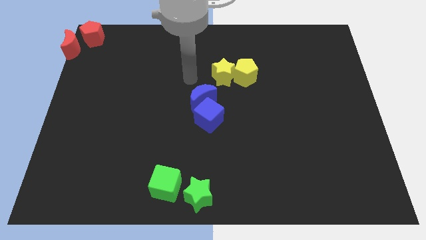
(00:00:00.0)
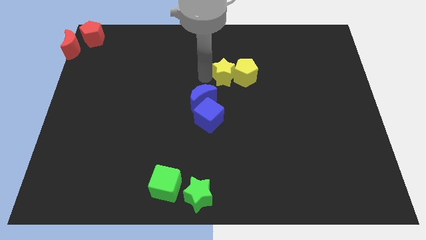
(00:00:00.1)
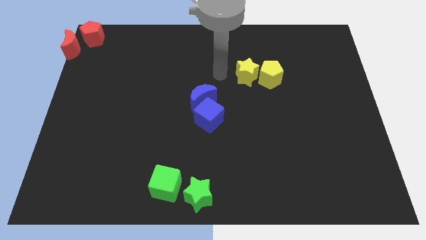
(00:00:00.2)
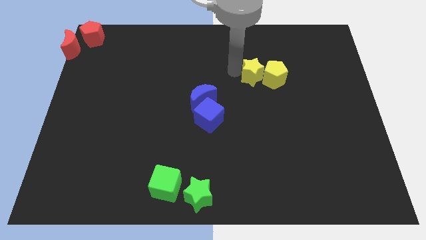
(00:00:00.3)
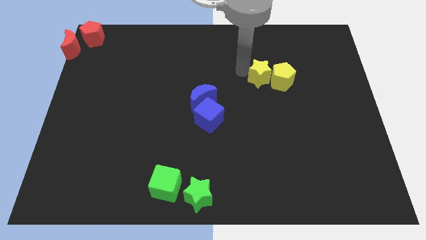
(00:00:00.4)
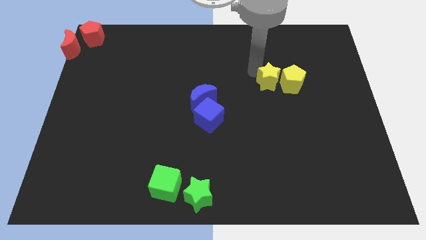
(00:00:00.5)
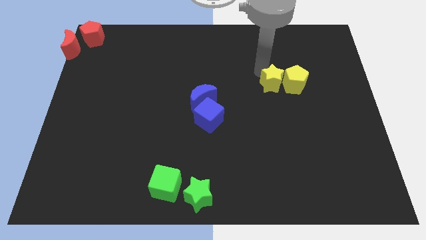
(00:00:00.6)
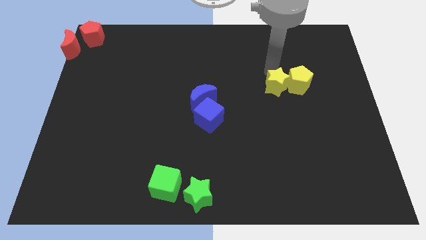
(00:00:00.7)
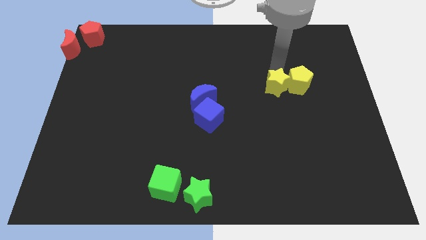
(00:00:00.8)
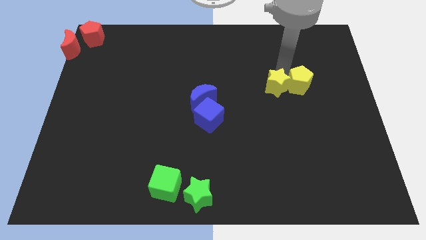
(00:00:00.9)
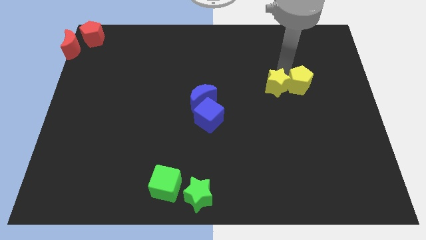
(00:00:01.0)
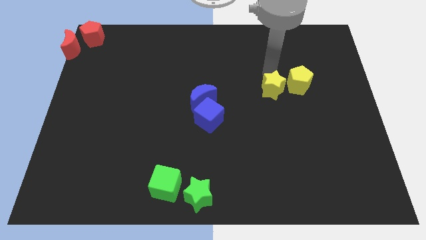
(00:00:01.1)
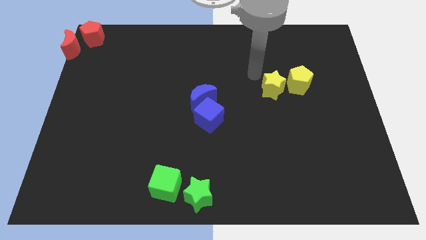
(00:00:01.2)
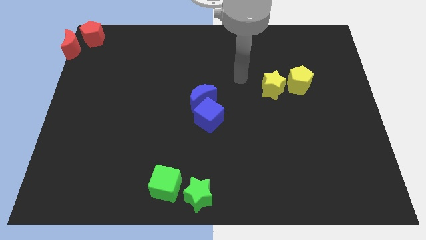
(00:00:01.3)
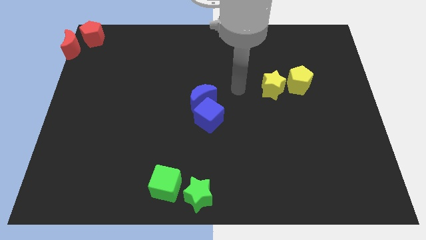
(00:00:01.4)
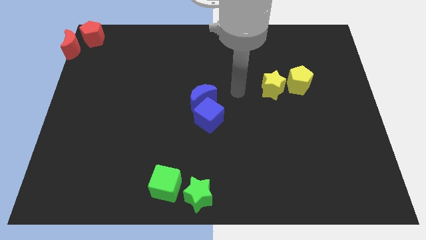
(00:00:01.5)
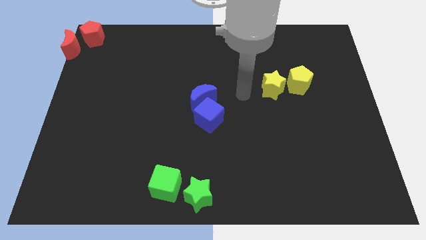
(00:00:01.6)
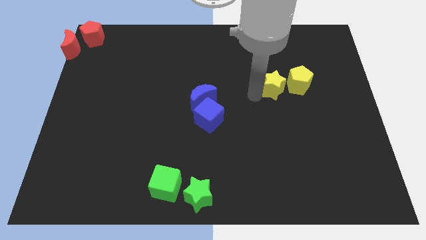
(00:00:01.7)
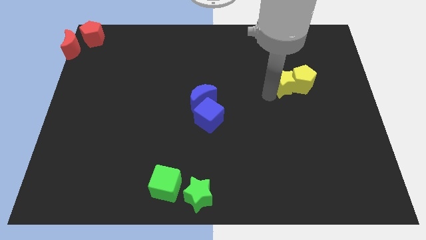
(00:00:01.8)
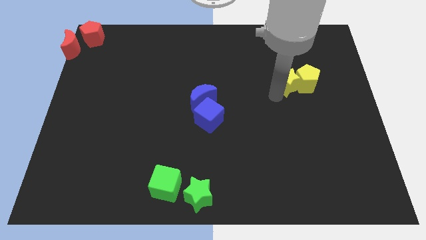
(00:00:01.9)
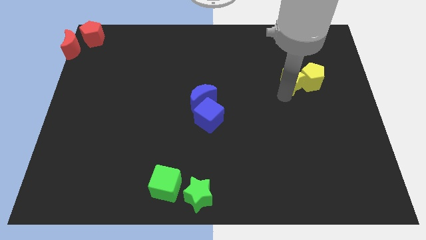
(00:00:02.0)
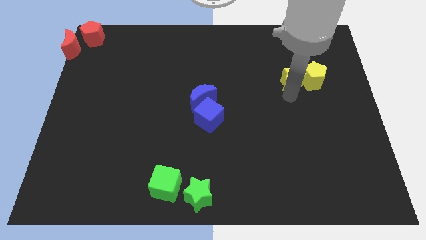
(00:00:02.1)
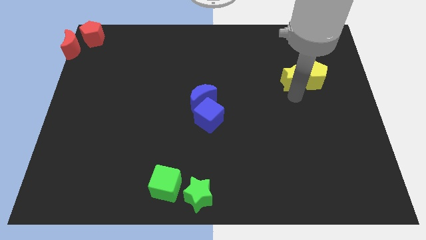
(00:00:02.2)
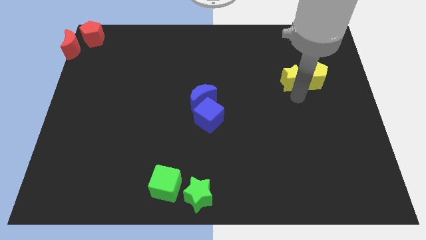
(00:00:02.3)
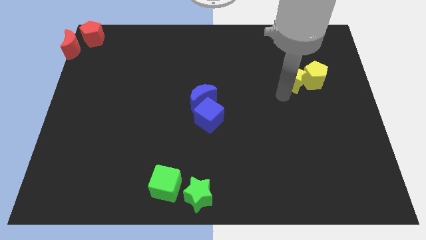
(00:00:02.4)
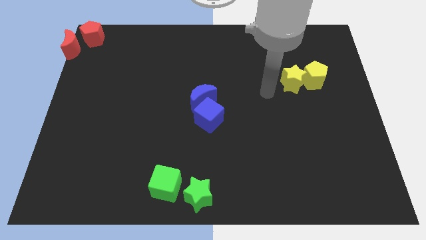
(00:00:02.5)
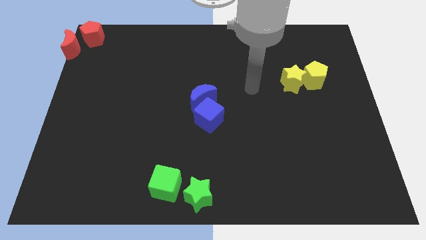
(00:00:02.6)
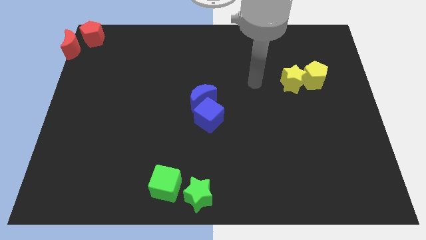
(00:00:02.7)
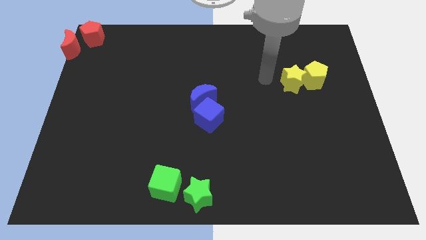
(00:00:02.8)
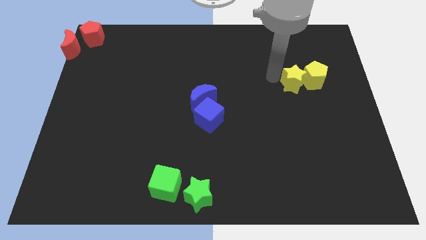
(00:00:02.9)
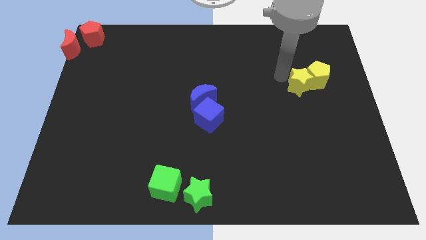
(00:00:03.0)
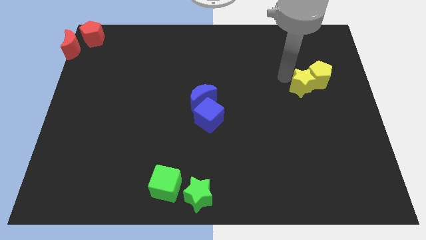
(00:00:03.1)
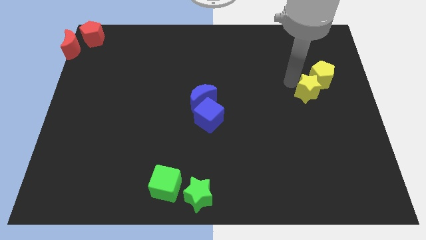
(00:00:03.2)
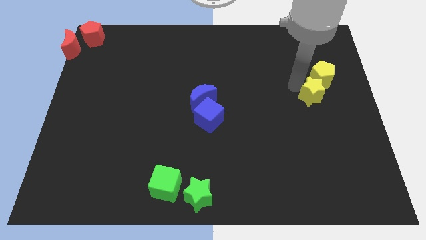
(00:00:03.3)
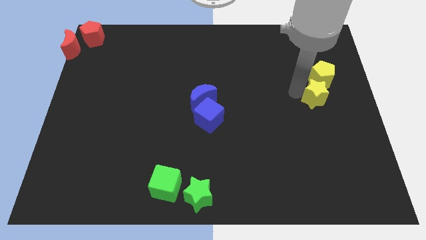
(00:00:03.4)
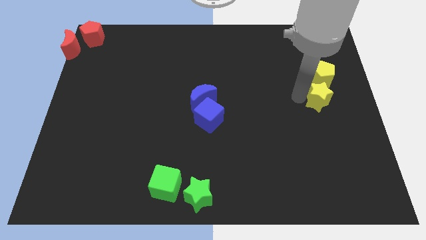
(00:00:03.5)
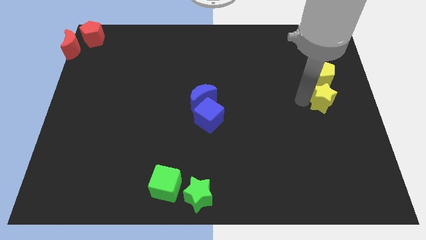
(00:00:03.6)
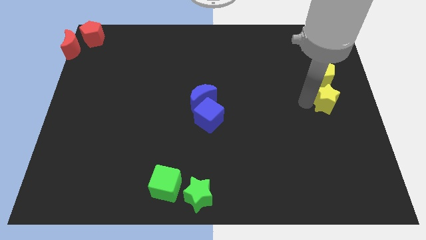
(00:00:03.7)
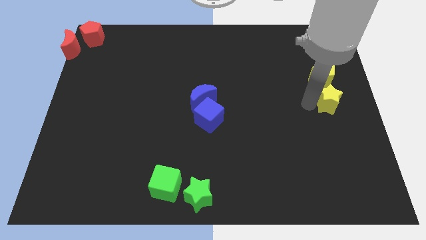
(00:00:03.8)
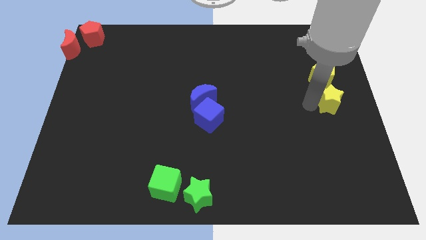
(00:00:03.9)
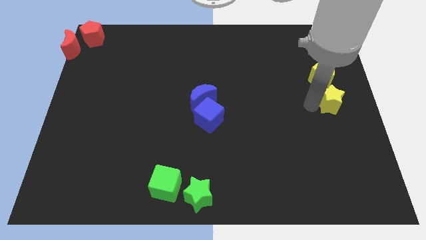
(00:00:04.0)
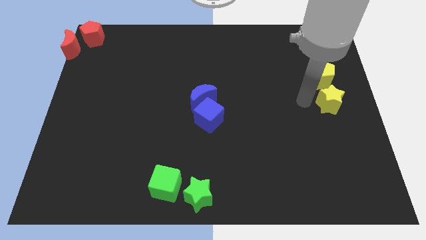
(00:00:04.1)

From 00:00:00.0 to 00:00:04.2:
move the yellow blocks towards the right center of the board

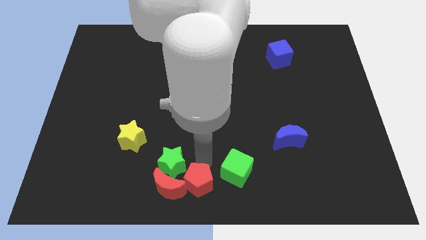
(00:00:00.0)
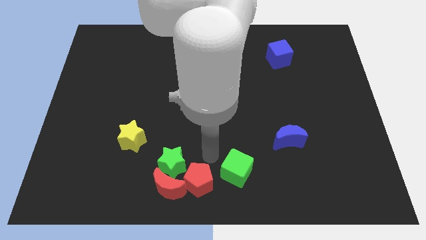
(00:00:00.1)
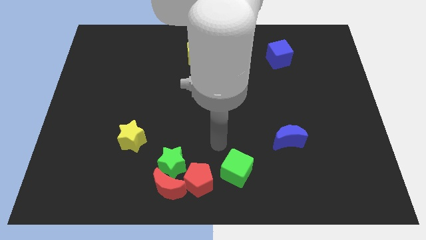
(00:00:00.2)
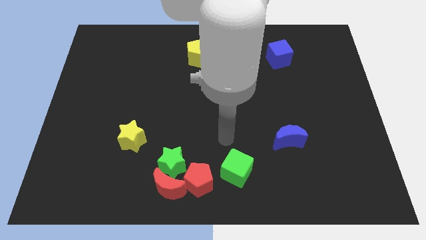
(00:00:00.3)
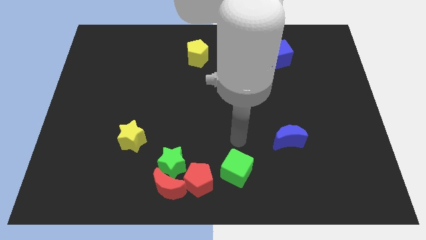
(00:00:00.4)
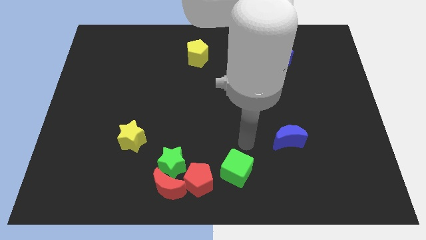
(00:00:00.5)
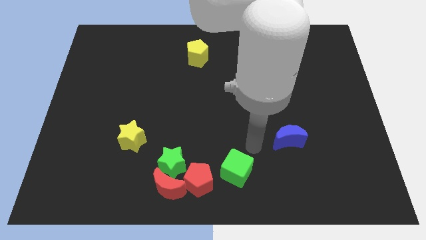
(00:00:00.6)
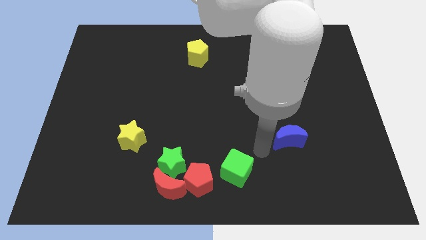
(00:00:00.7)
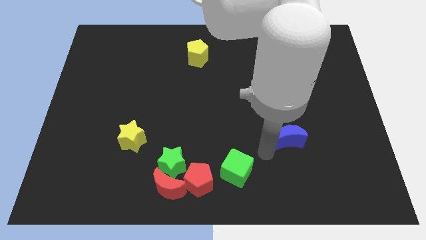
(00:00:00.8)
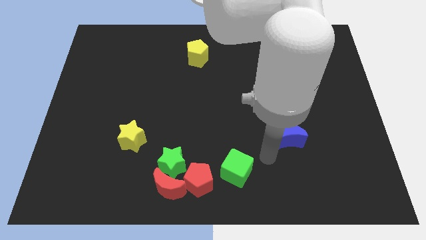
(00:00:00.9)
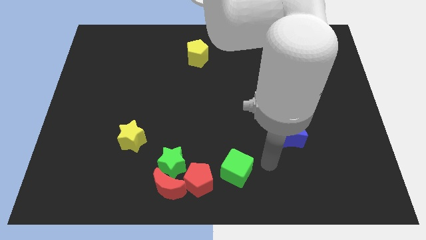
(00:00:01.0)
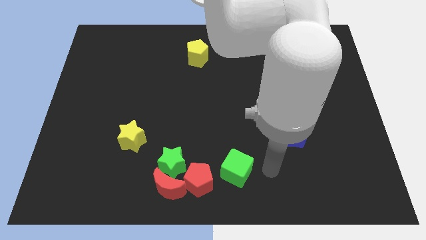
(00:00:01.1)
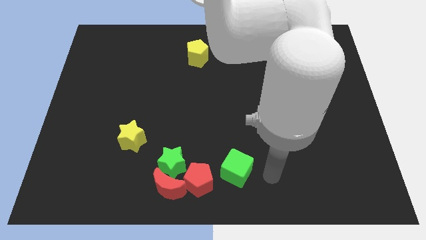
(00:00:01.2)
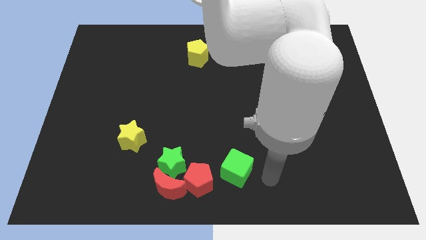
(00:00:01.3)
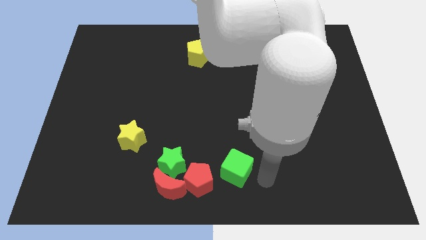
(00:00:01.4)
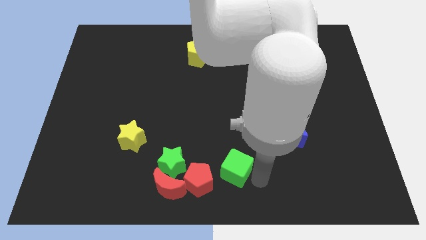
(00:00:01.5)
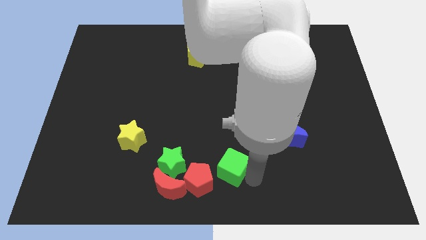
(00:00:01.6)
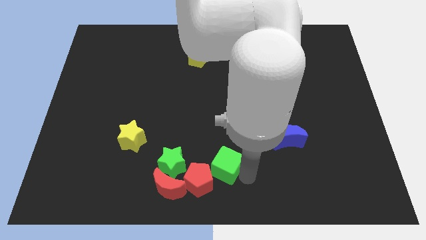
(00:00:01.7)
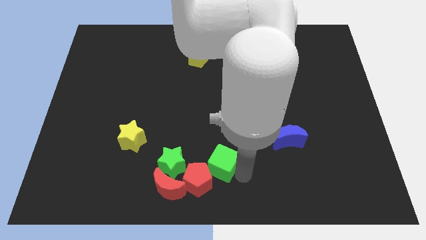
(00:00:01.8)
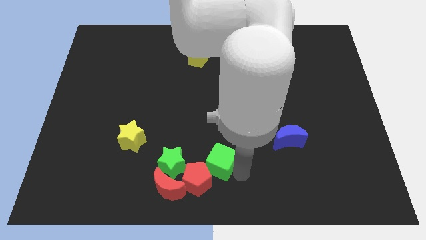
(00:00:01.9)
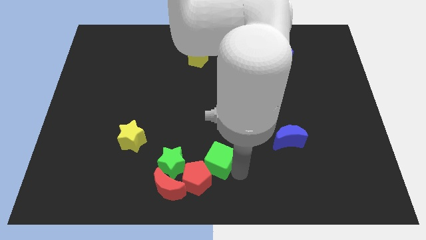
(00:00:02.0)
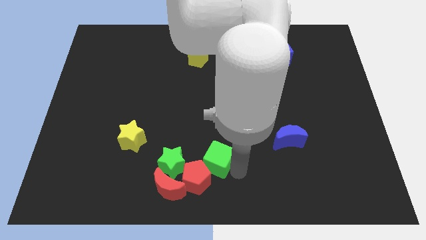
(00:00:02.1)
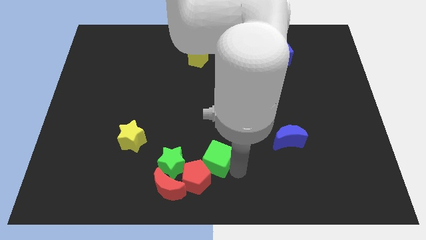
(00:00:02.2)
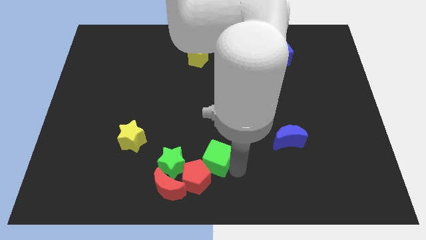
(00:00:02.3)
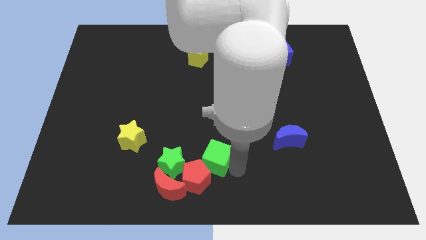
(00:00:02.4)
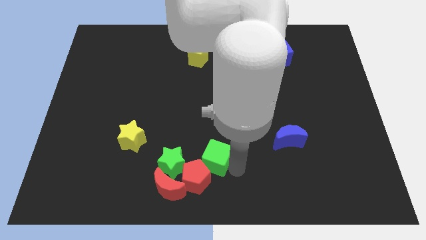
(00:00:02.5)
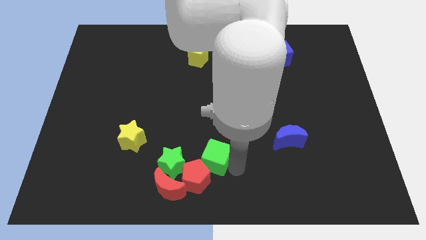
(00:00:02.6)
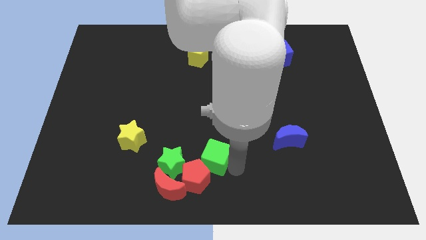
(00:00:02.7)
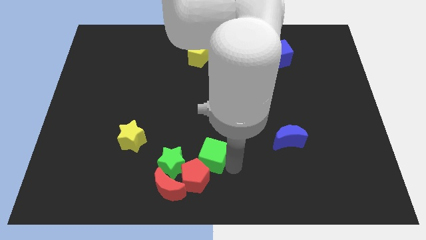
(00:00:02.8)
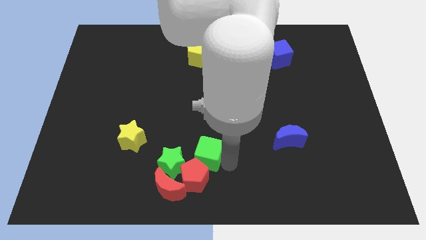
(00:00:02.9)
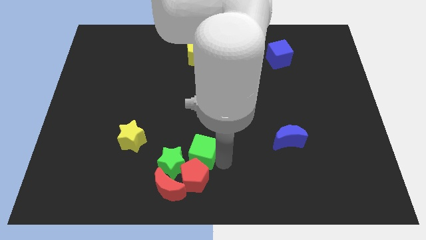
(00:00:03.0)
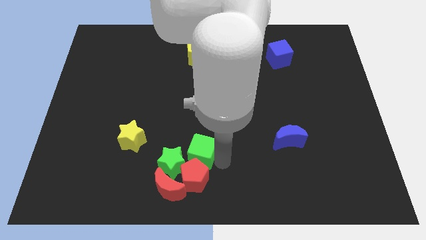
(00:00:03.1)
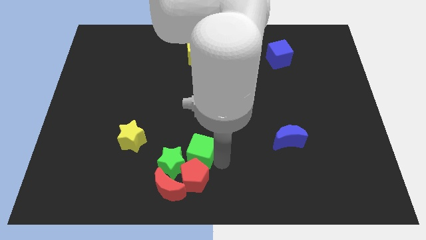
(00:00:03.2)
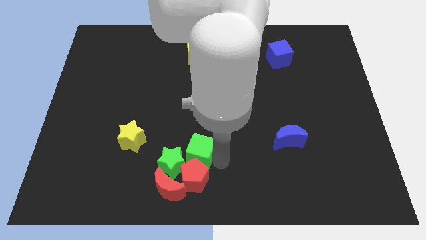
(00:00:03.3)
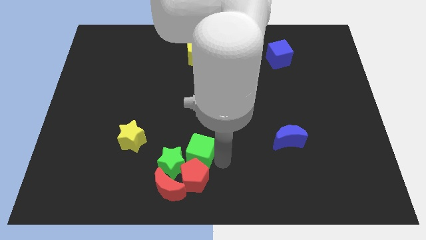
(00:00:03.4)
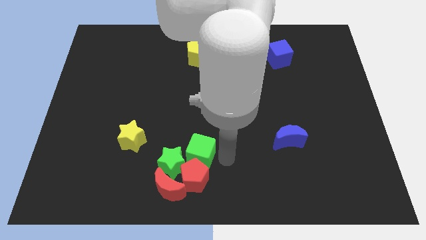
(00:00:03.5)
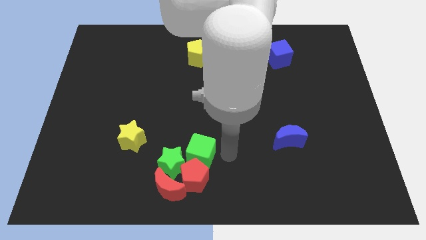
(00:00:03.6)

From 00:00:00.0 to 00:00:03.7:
place green cube at the top of the red pentagon

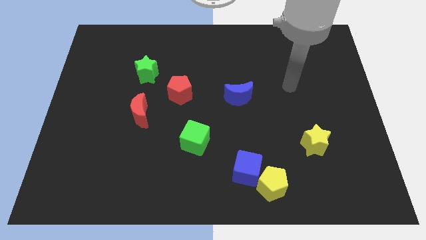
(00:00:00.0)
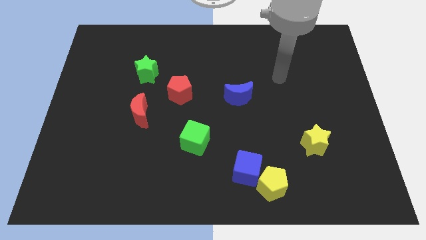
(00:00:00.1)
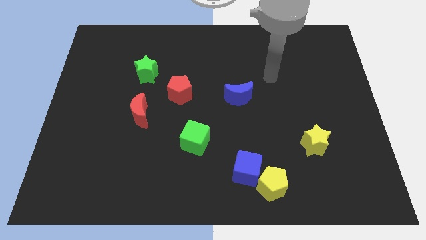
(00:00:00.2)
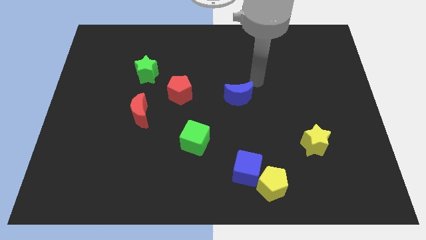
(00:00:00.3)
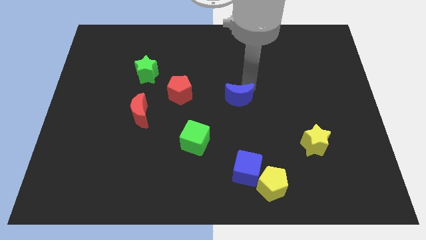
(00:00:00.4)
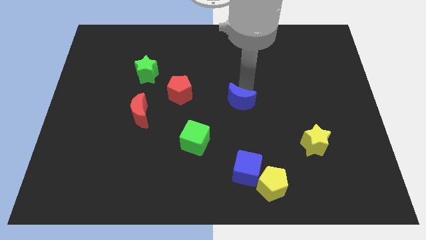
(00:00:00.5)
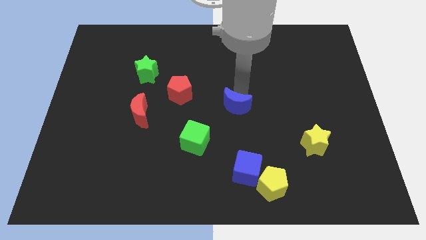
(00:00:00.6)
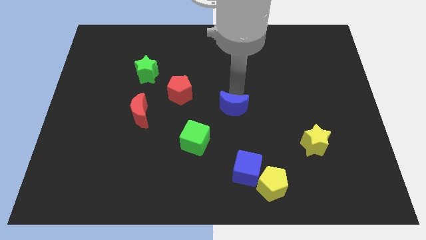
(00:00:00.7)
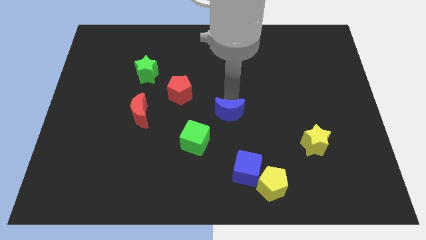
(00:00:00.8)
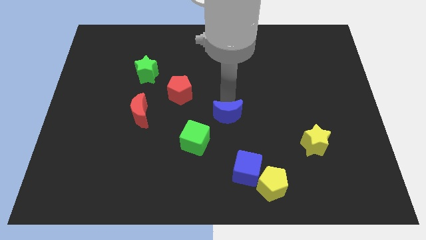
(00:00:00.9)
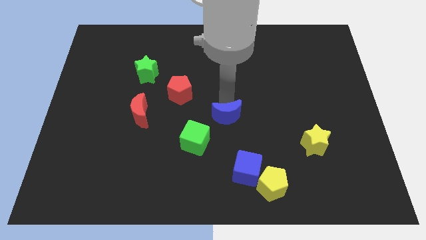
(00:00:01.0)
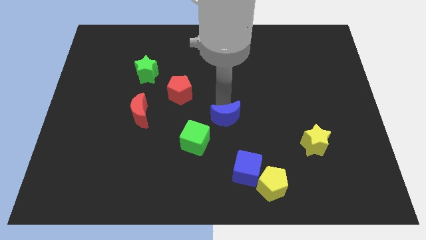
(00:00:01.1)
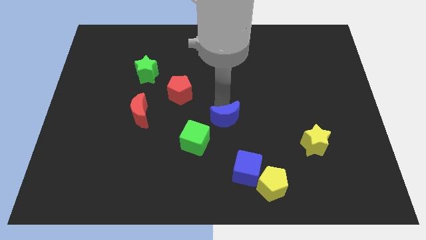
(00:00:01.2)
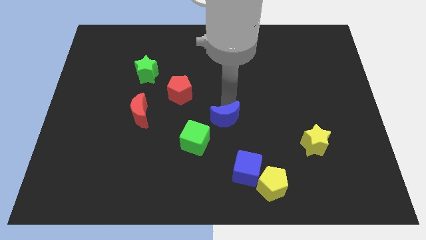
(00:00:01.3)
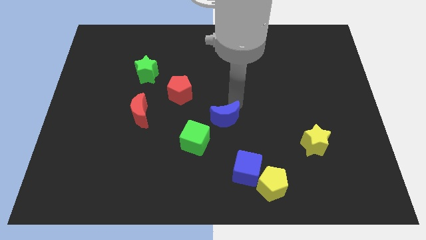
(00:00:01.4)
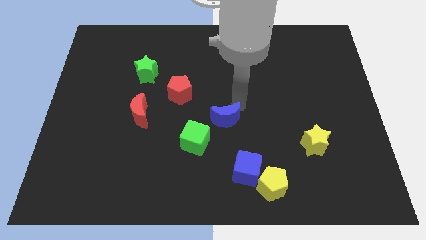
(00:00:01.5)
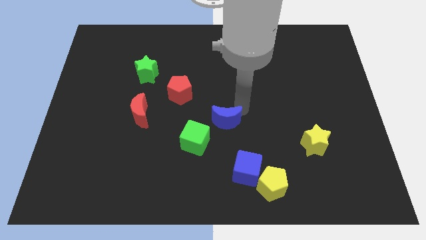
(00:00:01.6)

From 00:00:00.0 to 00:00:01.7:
push the blue crescent towards the green cube
